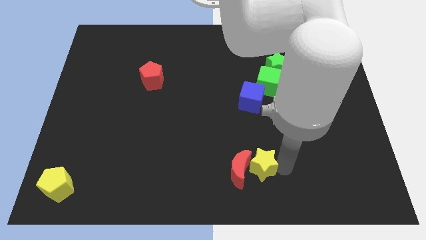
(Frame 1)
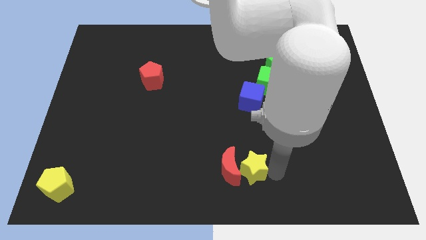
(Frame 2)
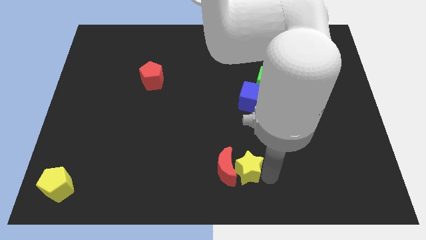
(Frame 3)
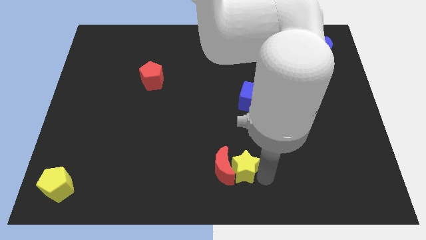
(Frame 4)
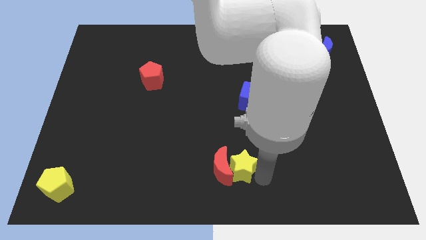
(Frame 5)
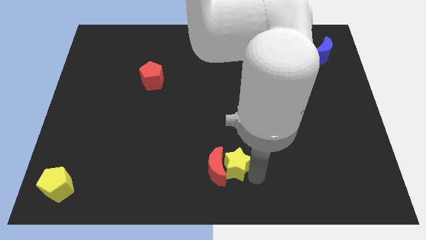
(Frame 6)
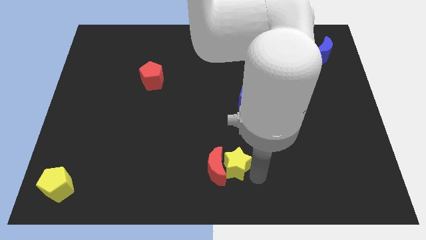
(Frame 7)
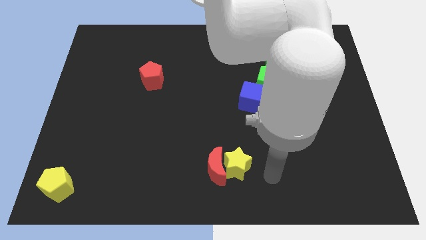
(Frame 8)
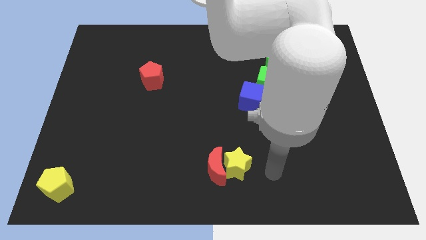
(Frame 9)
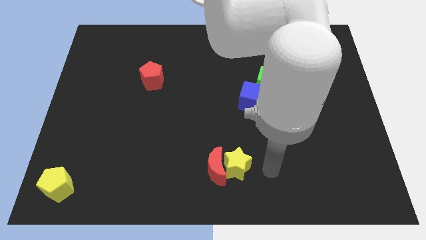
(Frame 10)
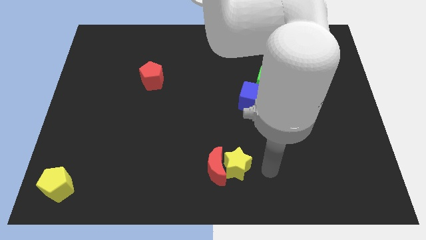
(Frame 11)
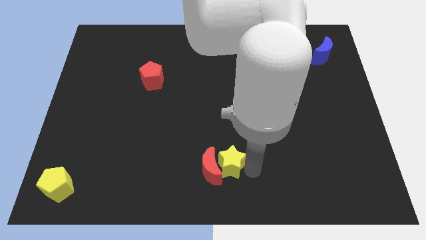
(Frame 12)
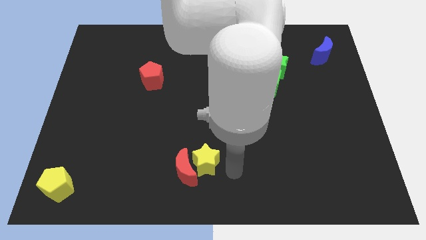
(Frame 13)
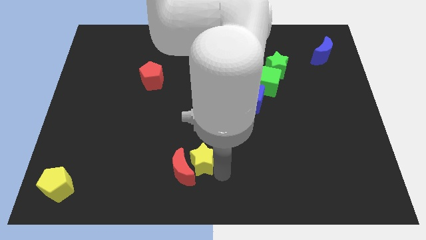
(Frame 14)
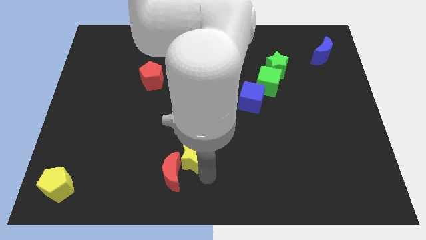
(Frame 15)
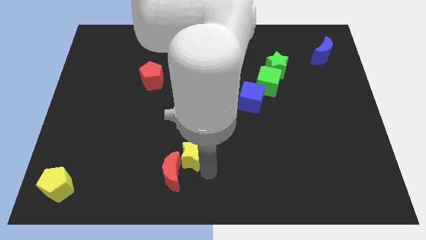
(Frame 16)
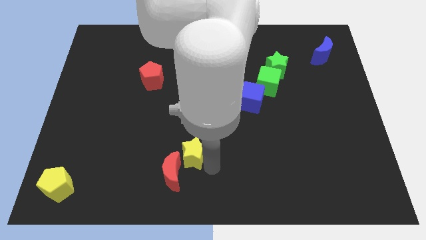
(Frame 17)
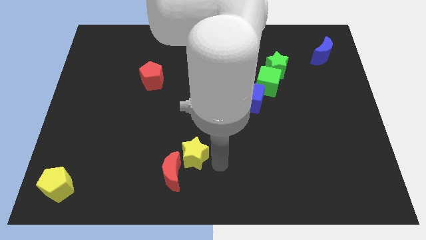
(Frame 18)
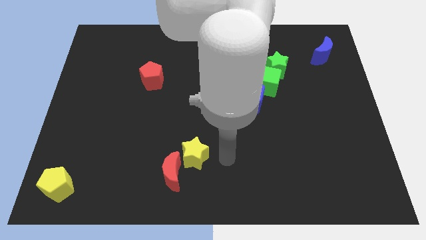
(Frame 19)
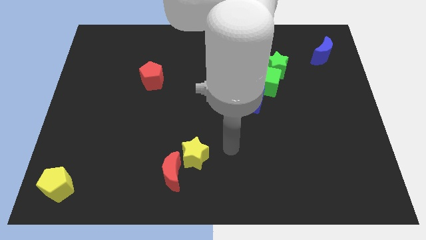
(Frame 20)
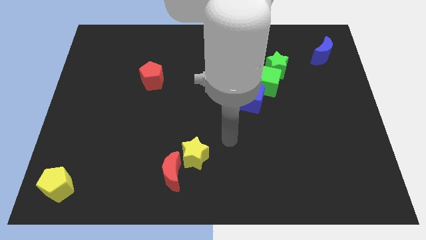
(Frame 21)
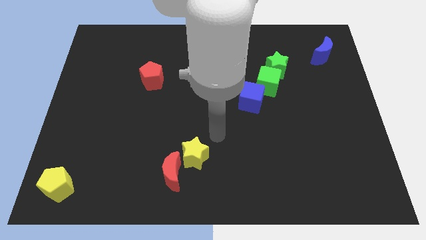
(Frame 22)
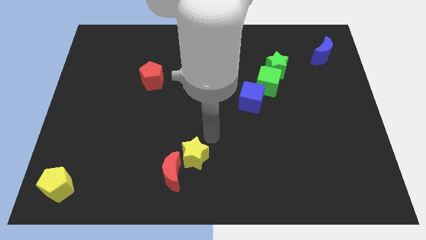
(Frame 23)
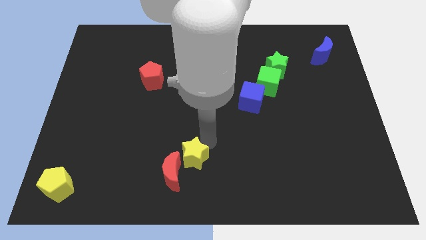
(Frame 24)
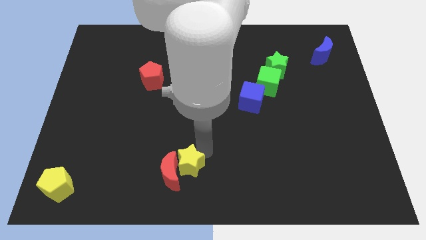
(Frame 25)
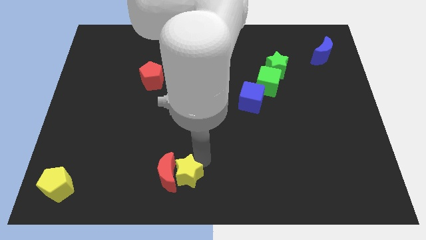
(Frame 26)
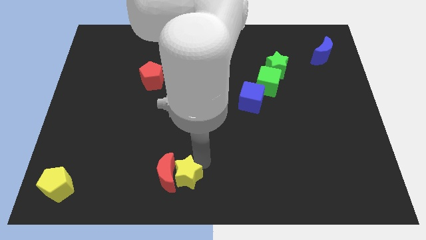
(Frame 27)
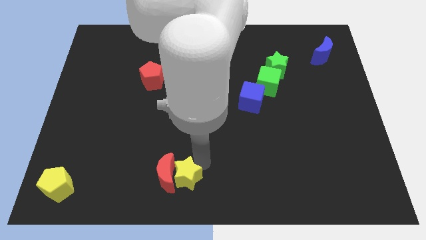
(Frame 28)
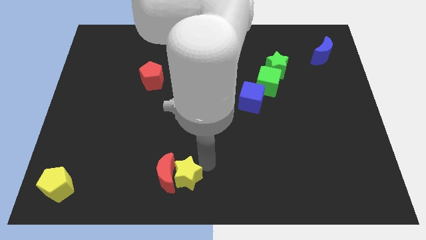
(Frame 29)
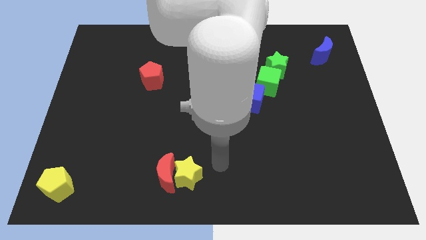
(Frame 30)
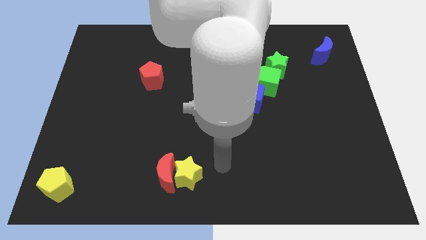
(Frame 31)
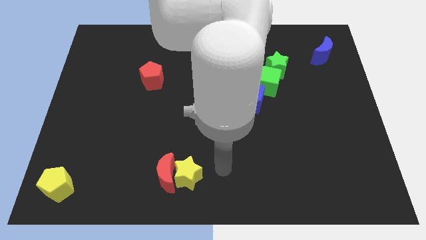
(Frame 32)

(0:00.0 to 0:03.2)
move the yellow star and red crescent away from the bottom center

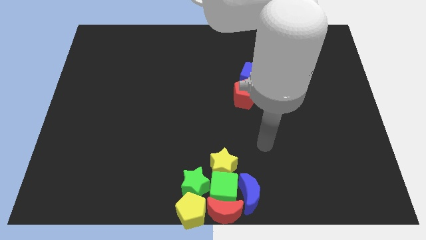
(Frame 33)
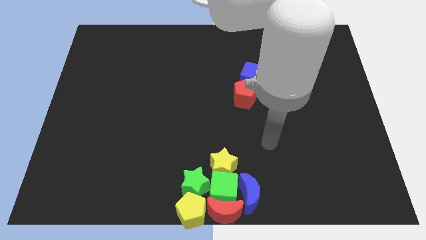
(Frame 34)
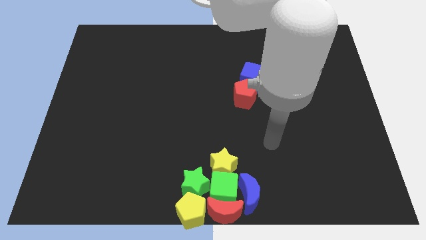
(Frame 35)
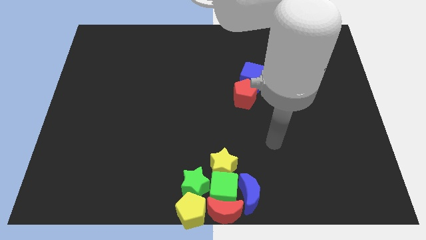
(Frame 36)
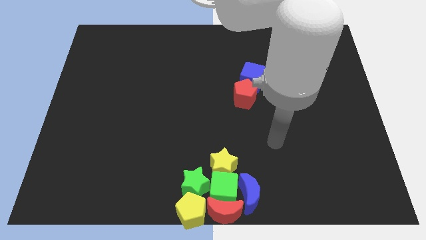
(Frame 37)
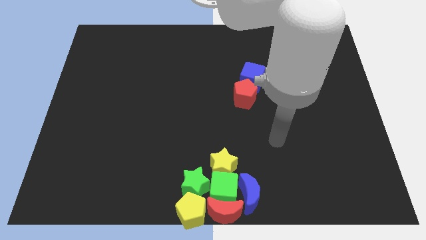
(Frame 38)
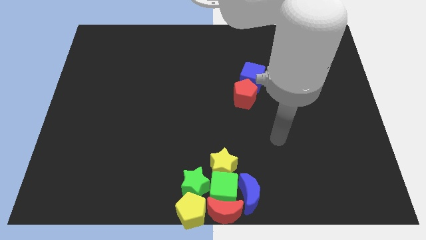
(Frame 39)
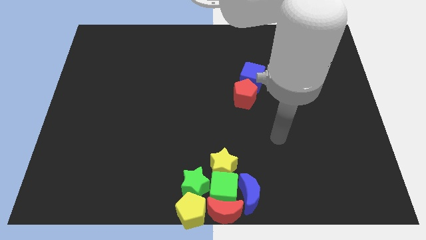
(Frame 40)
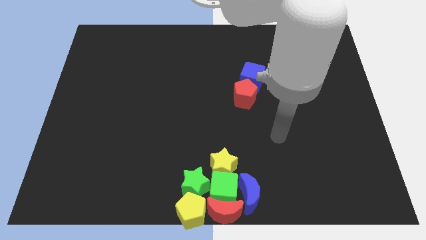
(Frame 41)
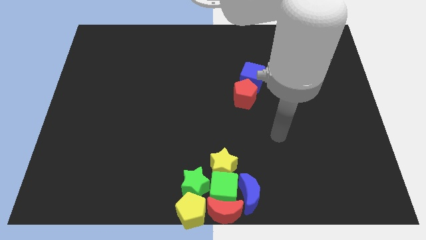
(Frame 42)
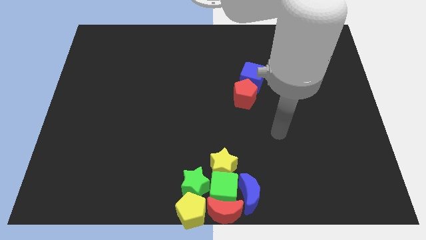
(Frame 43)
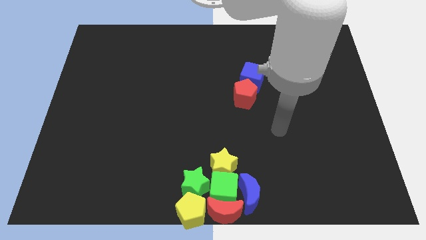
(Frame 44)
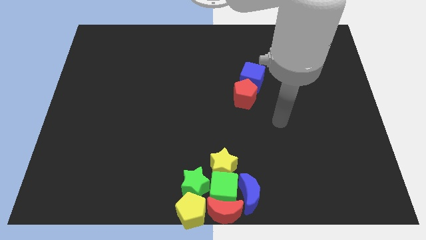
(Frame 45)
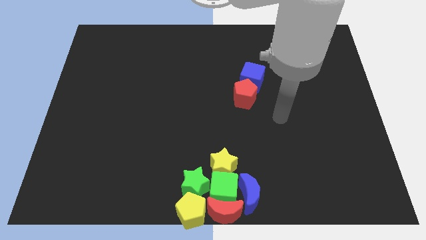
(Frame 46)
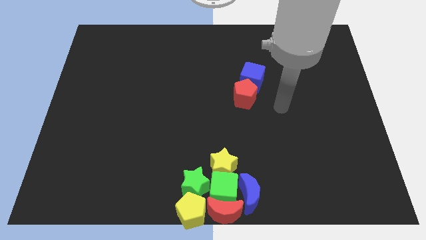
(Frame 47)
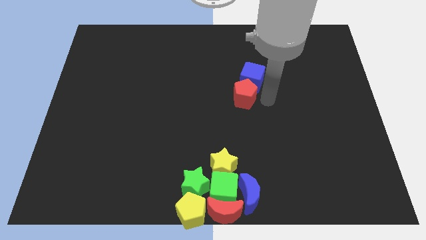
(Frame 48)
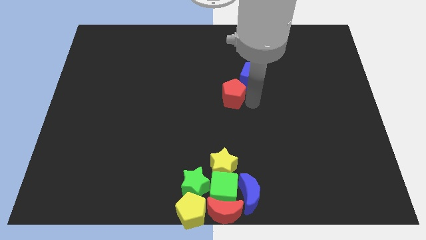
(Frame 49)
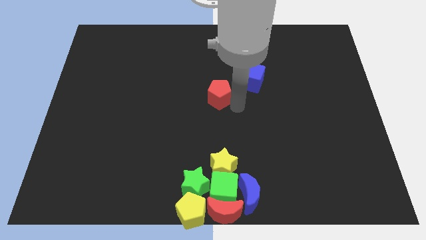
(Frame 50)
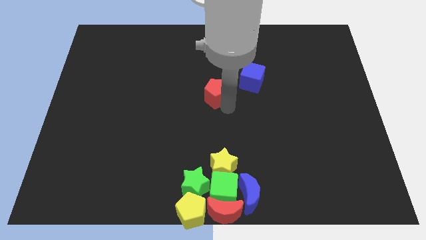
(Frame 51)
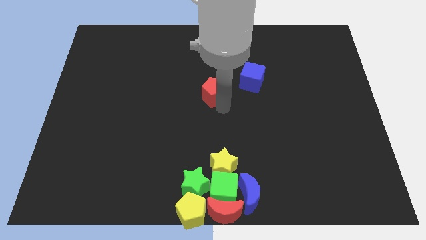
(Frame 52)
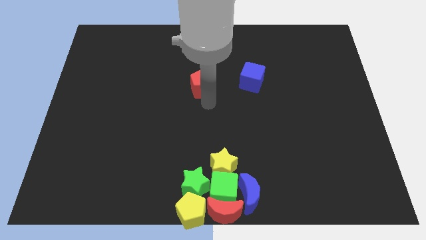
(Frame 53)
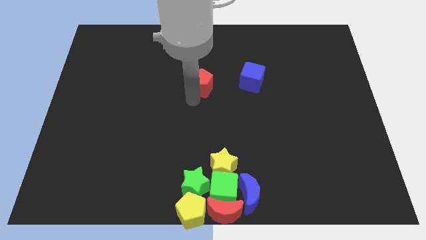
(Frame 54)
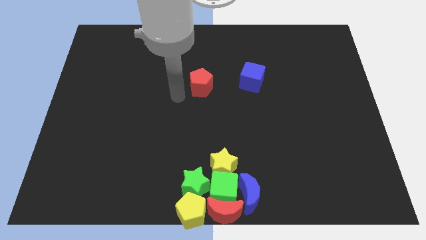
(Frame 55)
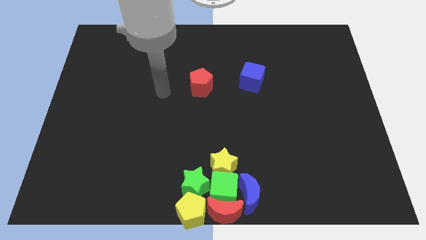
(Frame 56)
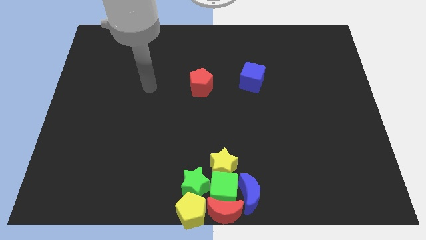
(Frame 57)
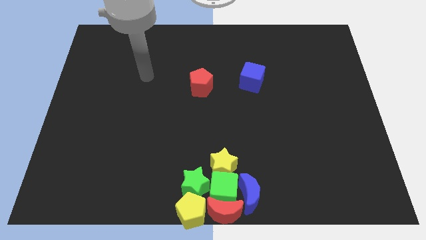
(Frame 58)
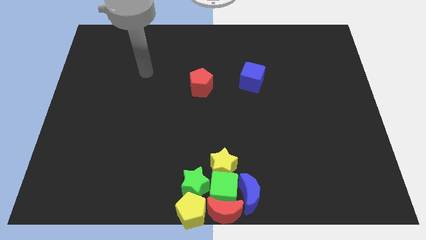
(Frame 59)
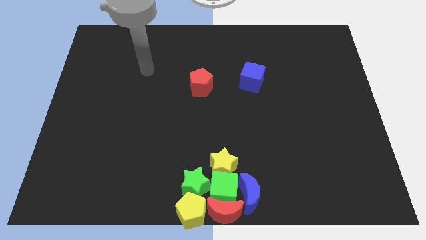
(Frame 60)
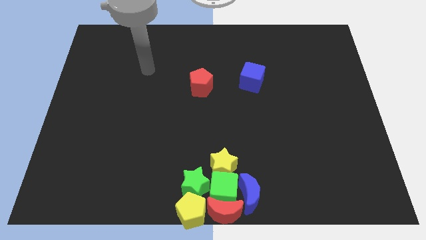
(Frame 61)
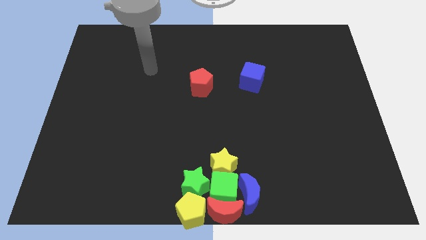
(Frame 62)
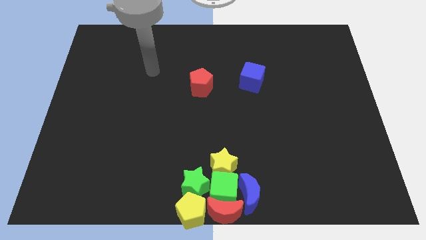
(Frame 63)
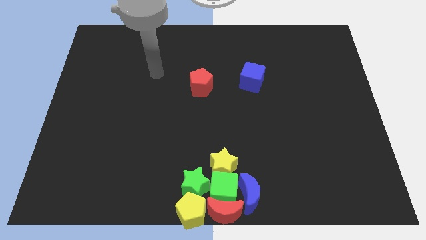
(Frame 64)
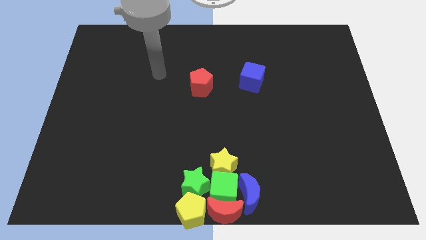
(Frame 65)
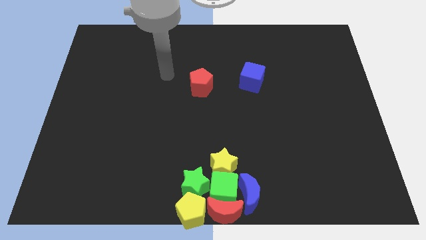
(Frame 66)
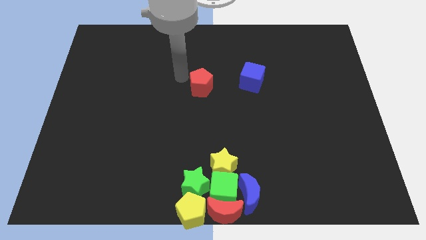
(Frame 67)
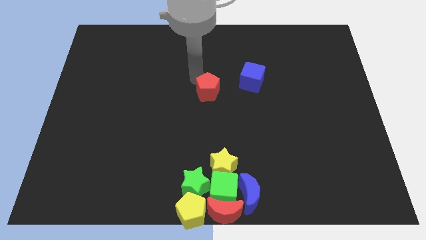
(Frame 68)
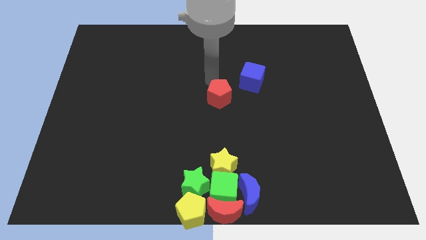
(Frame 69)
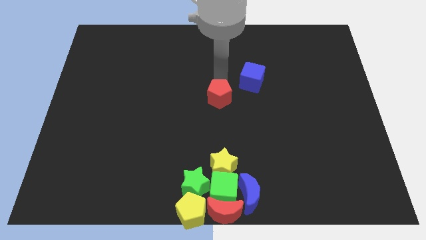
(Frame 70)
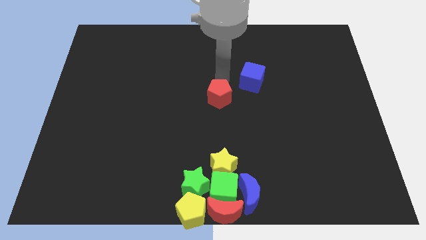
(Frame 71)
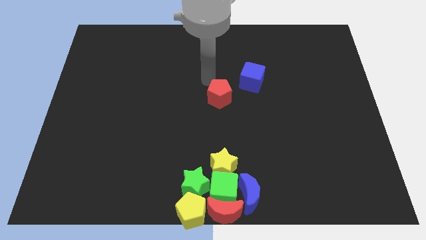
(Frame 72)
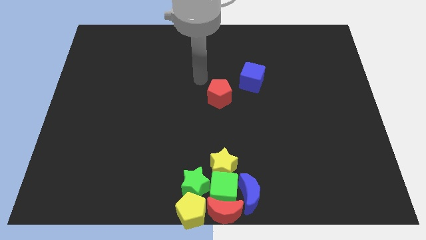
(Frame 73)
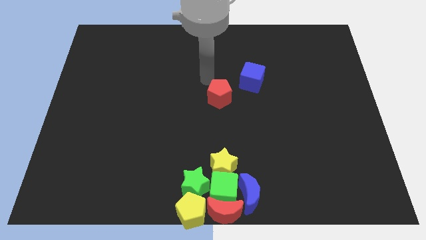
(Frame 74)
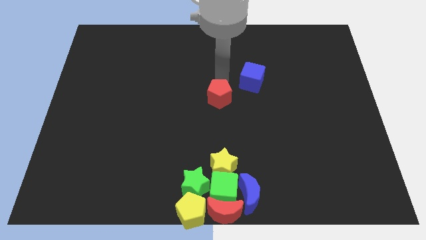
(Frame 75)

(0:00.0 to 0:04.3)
move the red pentagon towards the center of the board

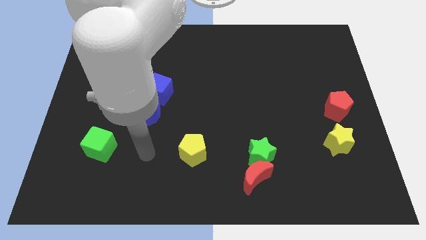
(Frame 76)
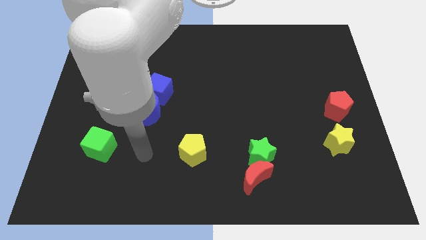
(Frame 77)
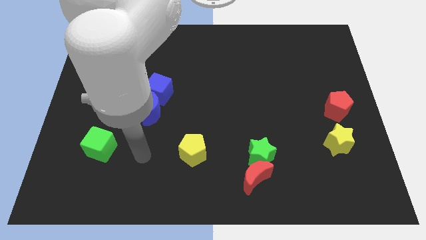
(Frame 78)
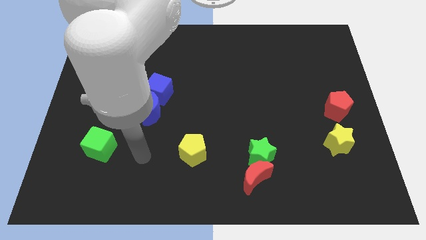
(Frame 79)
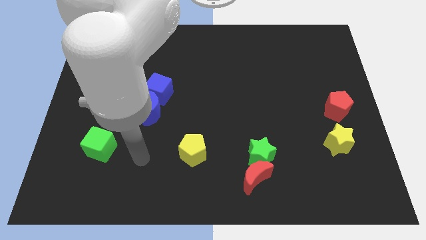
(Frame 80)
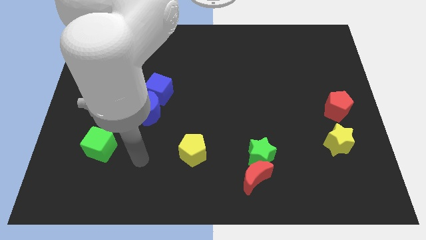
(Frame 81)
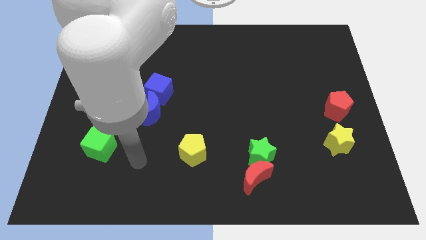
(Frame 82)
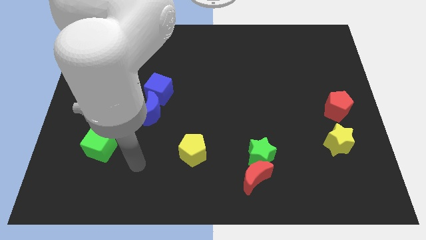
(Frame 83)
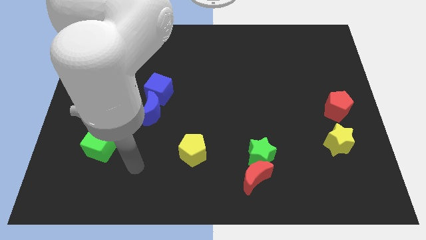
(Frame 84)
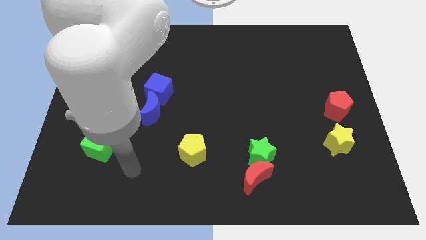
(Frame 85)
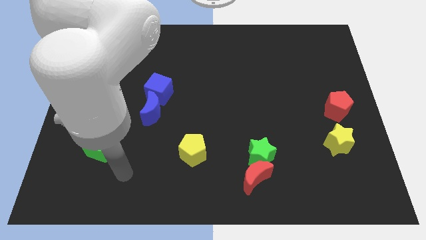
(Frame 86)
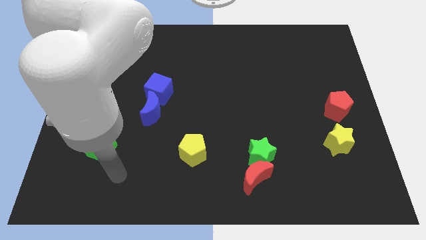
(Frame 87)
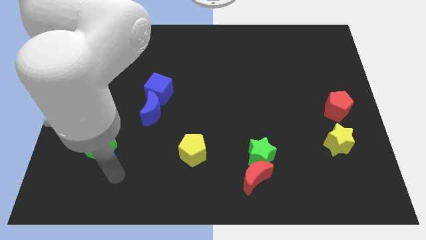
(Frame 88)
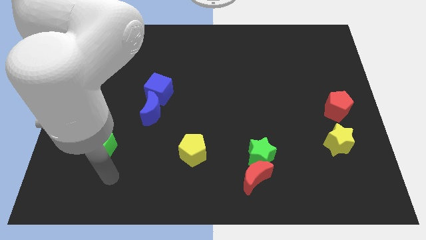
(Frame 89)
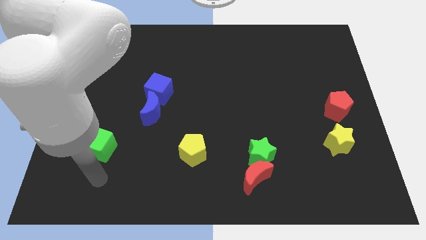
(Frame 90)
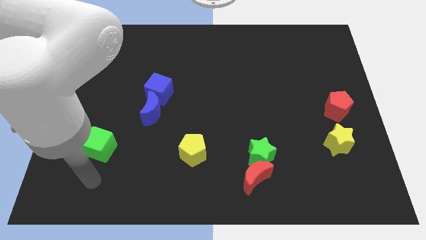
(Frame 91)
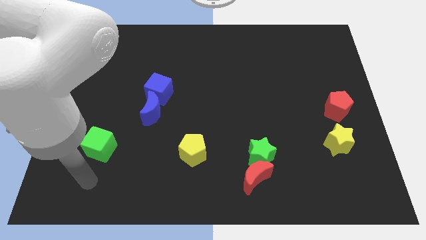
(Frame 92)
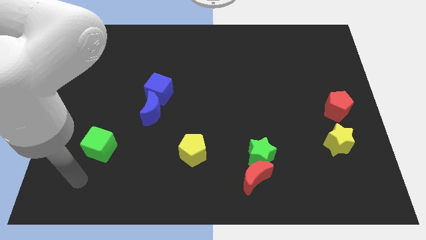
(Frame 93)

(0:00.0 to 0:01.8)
place your arm at the bottom of green cube
